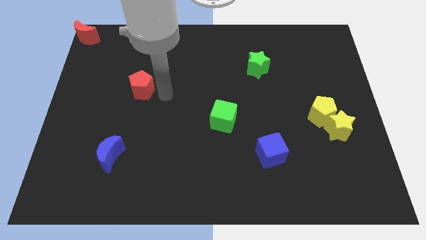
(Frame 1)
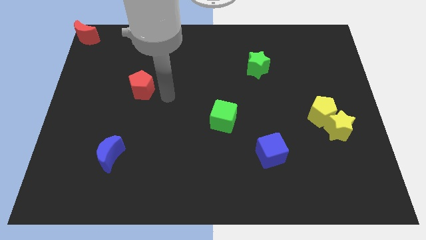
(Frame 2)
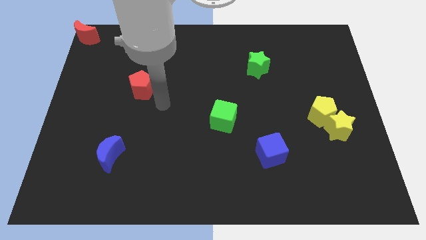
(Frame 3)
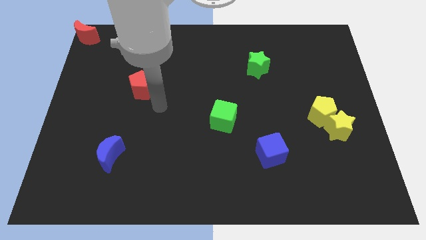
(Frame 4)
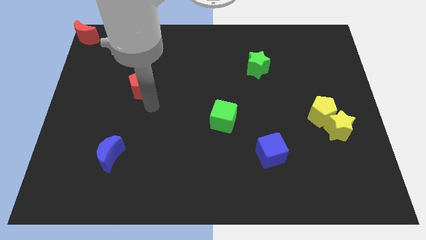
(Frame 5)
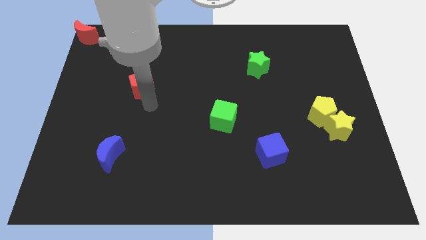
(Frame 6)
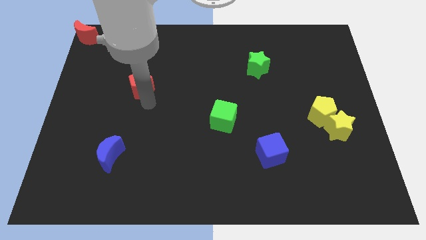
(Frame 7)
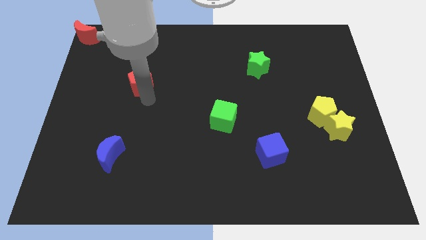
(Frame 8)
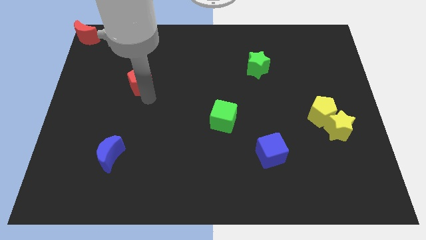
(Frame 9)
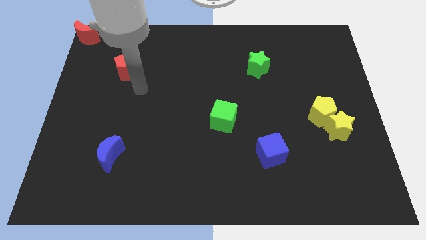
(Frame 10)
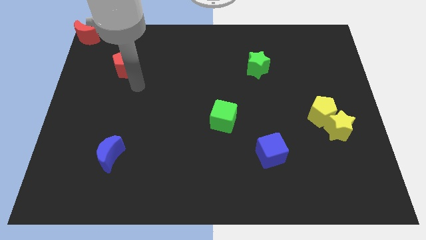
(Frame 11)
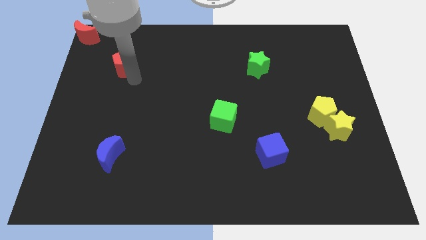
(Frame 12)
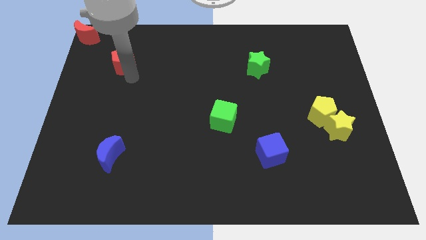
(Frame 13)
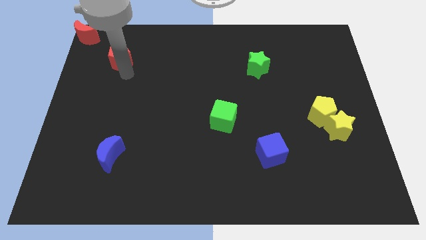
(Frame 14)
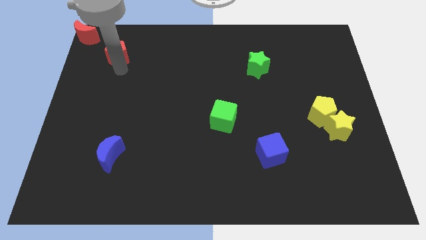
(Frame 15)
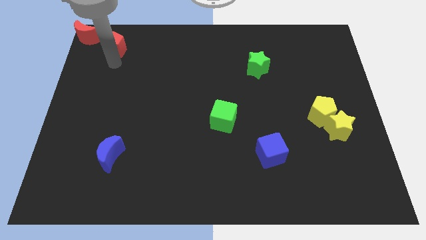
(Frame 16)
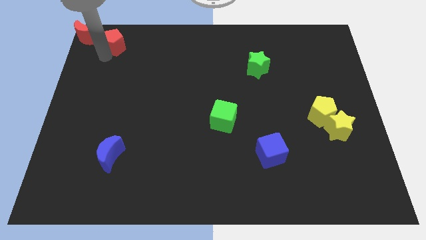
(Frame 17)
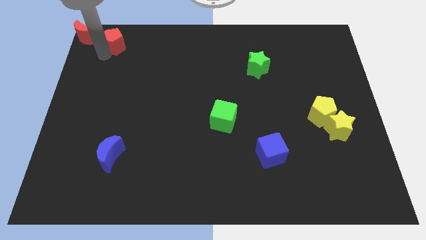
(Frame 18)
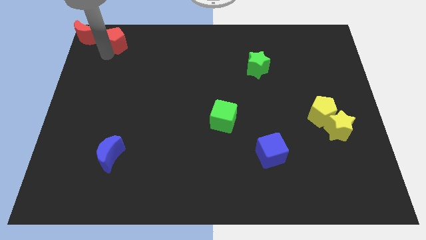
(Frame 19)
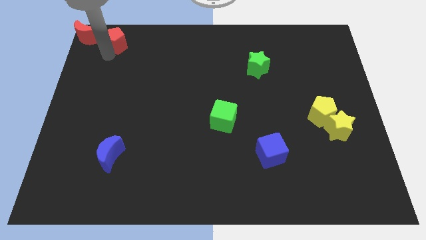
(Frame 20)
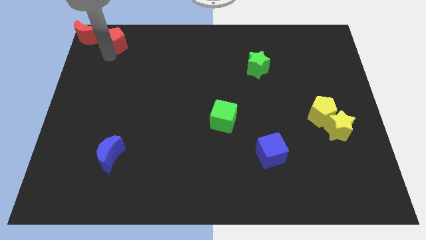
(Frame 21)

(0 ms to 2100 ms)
slide red pentagon towards the red crescent

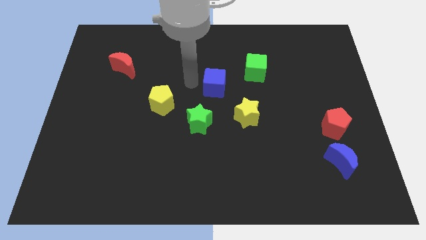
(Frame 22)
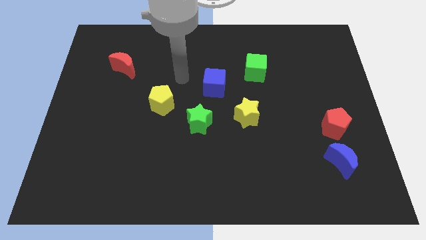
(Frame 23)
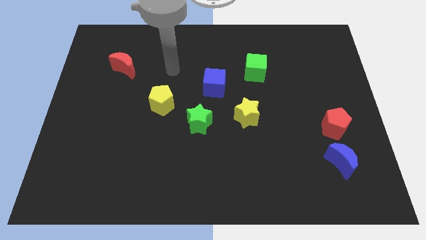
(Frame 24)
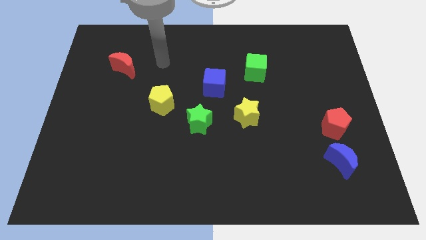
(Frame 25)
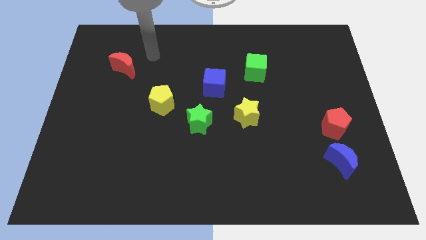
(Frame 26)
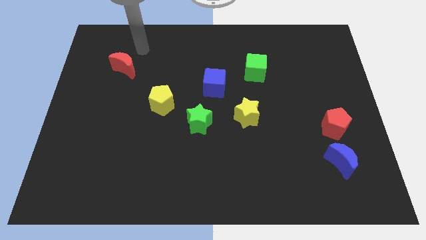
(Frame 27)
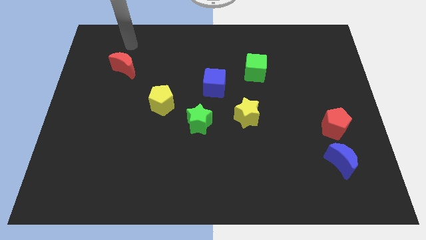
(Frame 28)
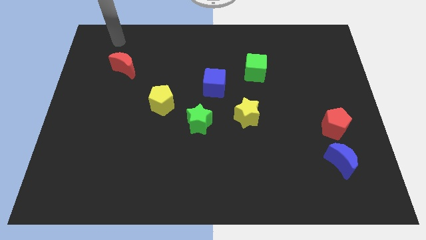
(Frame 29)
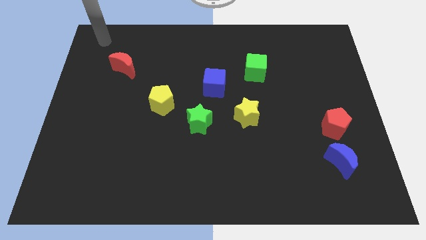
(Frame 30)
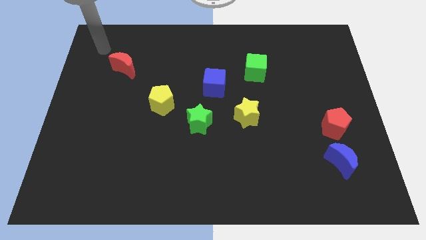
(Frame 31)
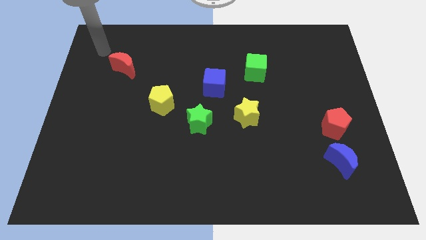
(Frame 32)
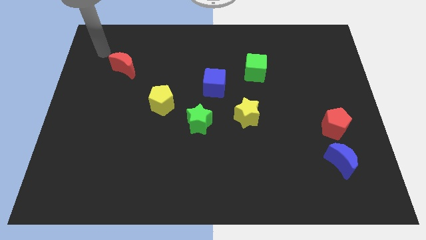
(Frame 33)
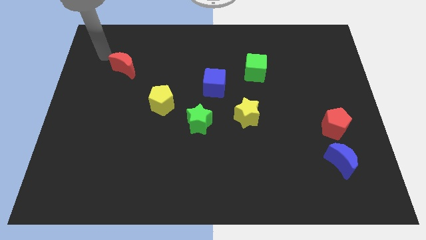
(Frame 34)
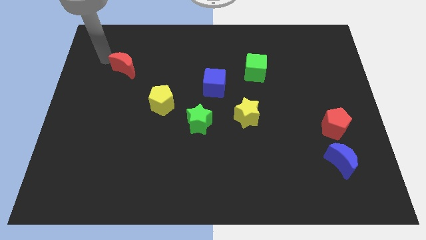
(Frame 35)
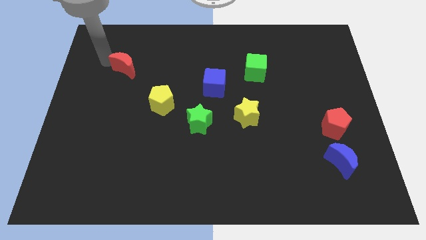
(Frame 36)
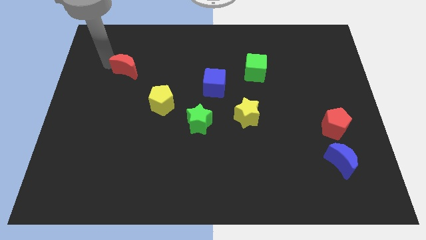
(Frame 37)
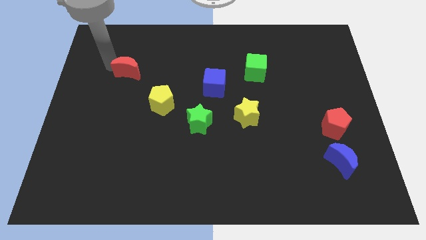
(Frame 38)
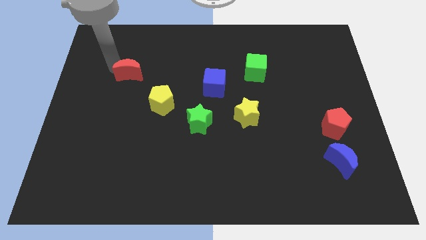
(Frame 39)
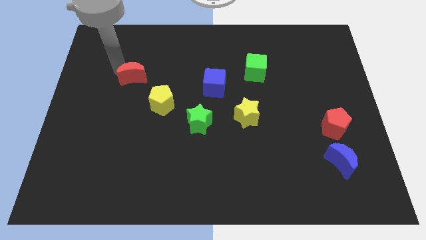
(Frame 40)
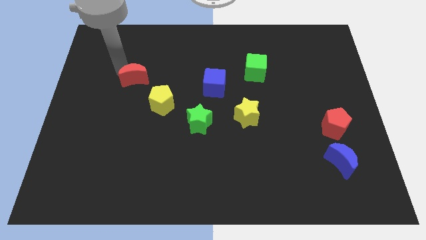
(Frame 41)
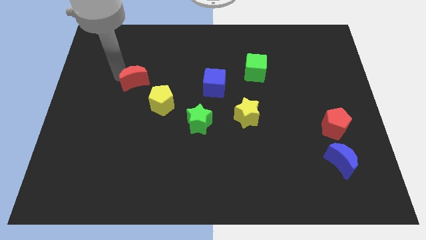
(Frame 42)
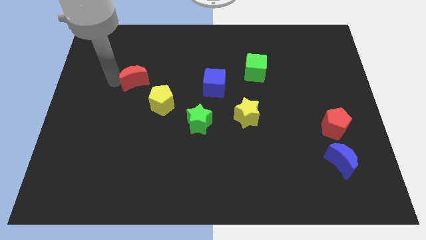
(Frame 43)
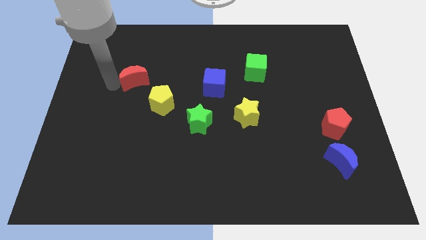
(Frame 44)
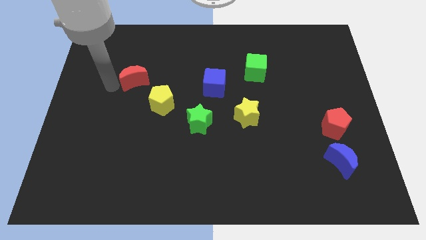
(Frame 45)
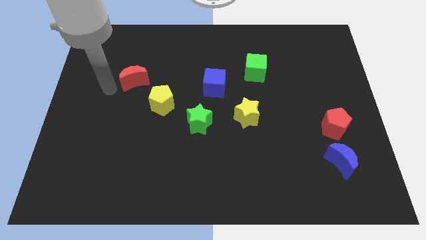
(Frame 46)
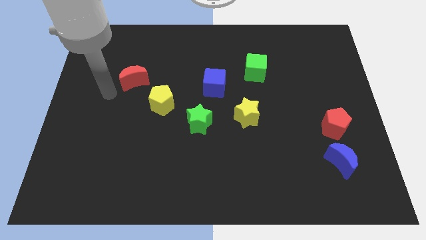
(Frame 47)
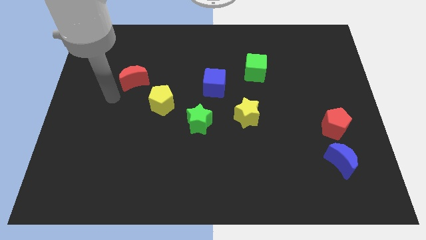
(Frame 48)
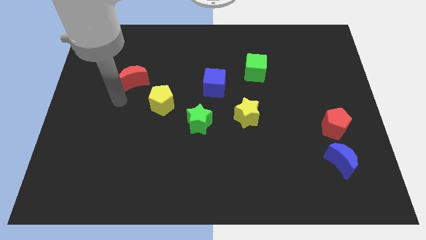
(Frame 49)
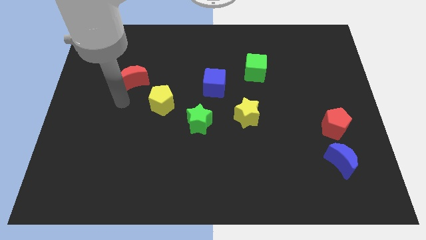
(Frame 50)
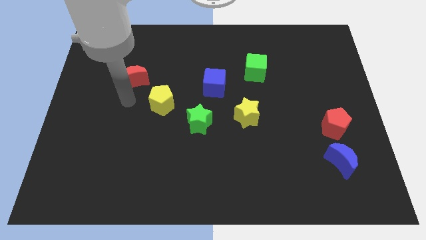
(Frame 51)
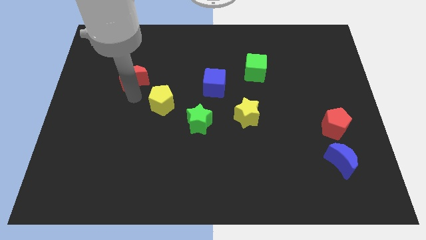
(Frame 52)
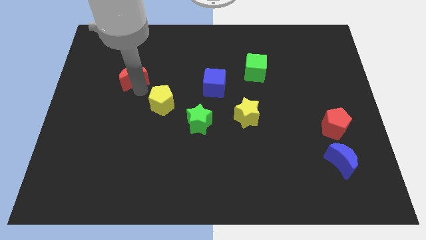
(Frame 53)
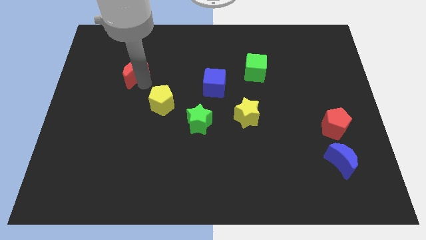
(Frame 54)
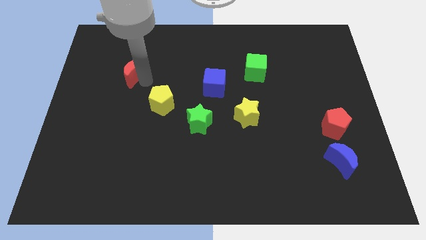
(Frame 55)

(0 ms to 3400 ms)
move the red crescent to the top left of the yellow pentagon

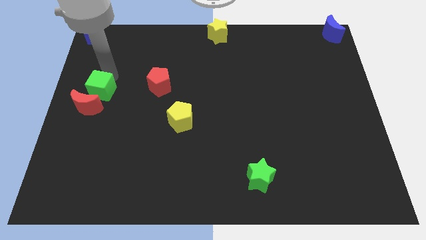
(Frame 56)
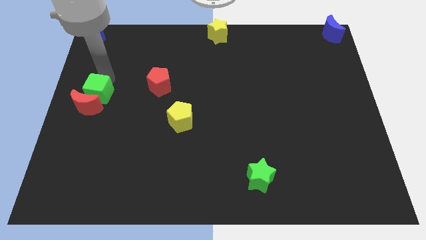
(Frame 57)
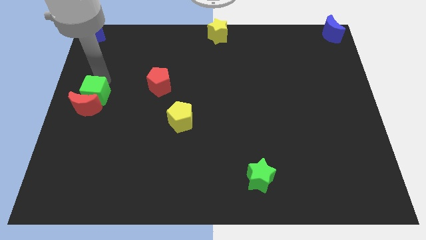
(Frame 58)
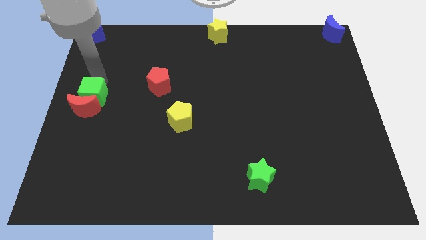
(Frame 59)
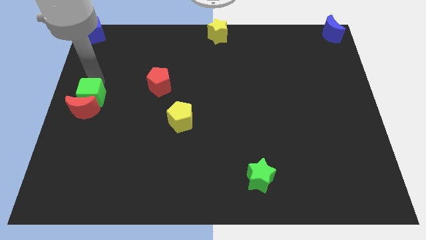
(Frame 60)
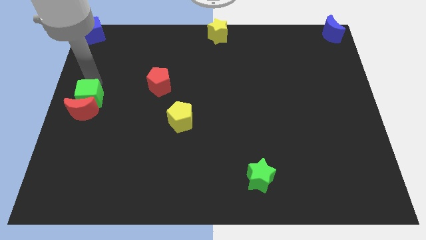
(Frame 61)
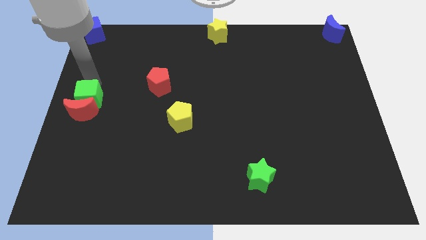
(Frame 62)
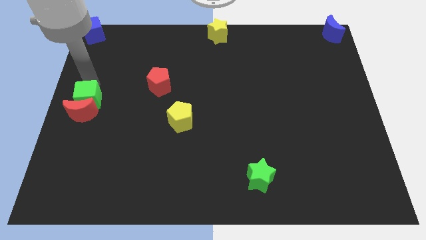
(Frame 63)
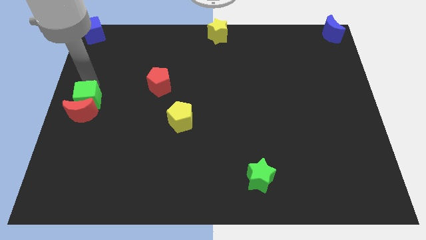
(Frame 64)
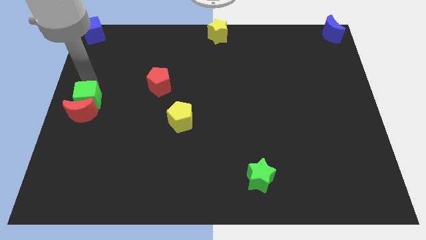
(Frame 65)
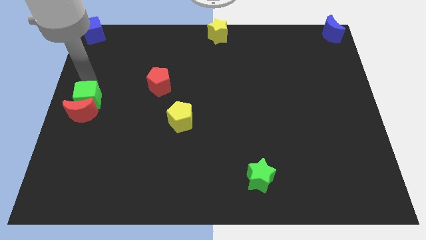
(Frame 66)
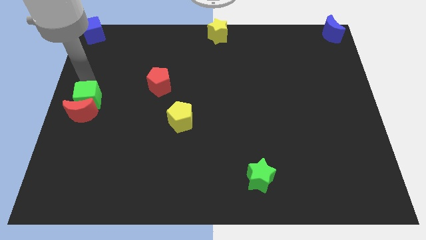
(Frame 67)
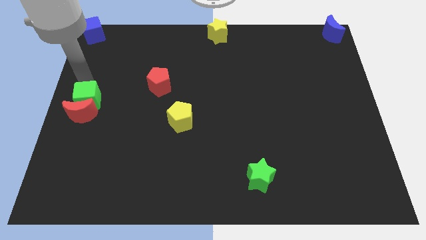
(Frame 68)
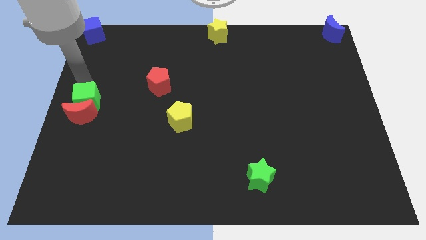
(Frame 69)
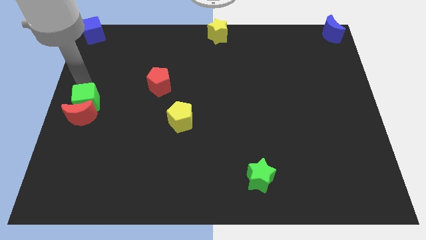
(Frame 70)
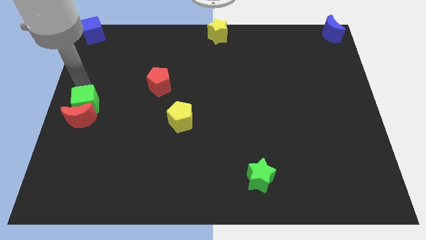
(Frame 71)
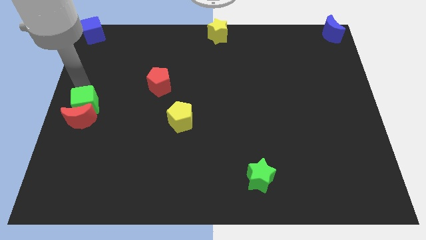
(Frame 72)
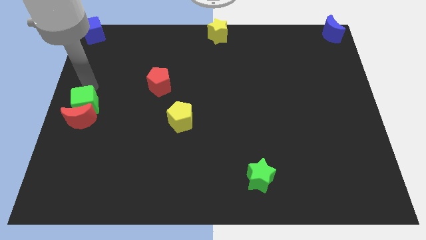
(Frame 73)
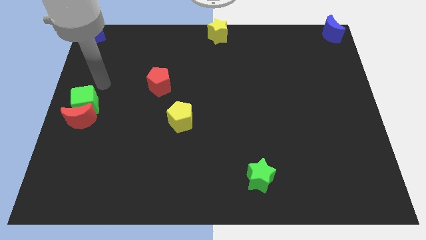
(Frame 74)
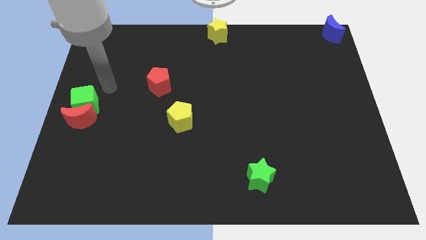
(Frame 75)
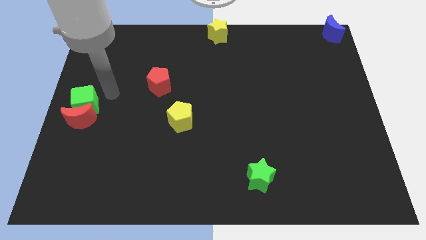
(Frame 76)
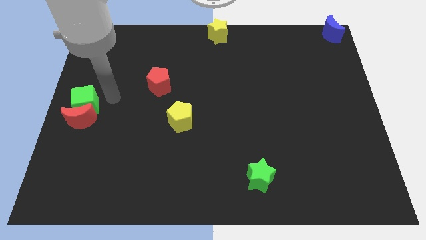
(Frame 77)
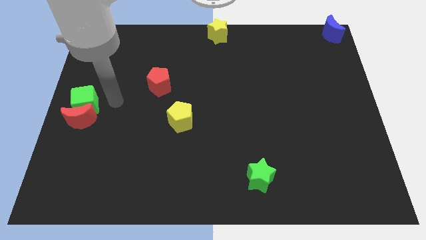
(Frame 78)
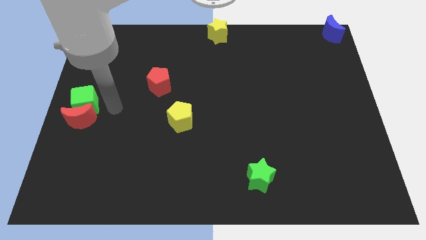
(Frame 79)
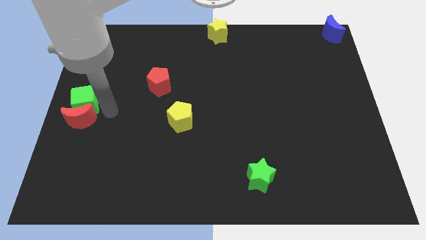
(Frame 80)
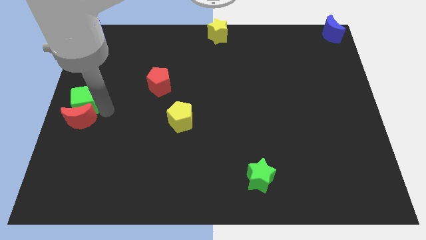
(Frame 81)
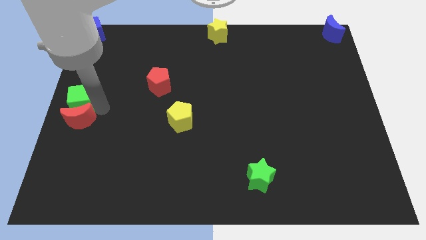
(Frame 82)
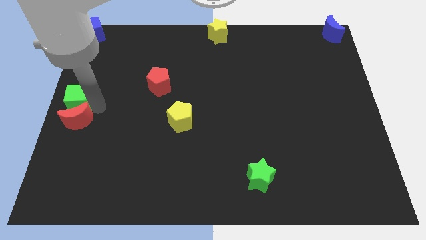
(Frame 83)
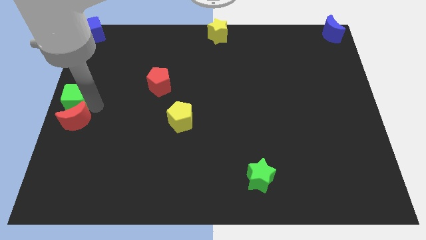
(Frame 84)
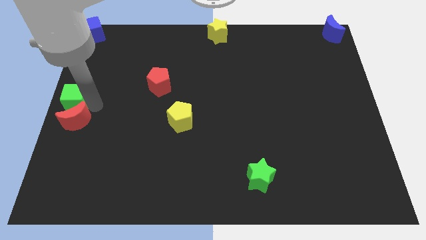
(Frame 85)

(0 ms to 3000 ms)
move the green cube into red crescent
